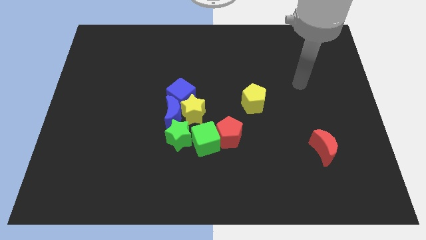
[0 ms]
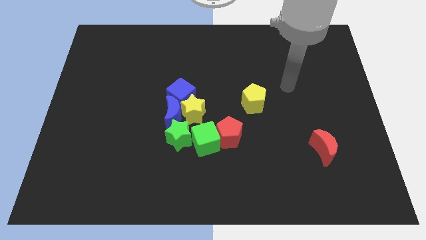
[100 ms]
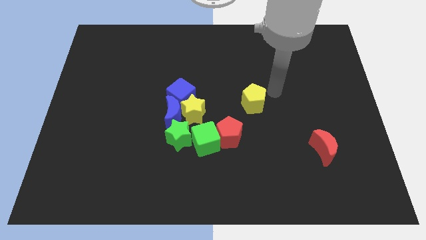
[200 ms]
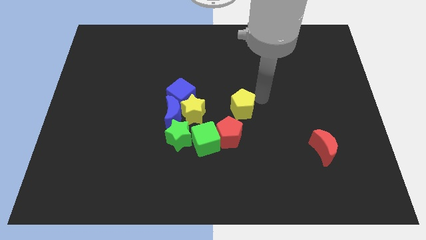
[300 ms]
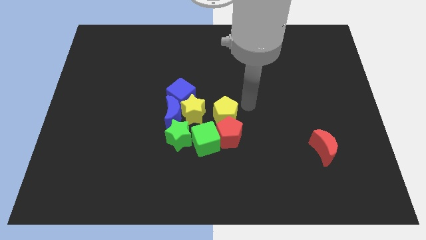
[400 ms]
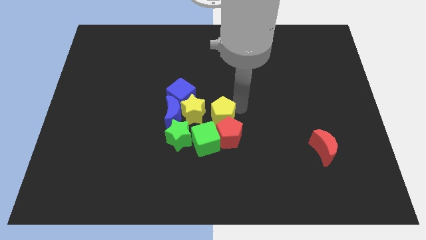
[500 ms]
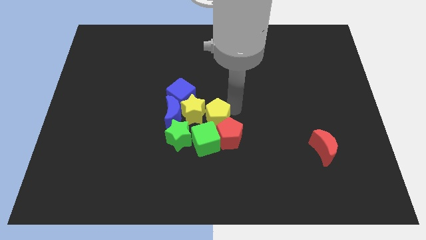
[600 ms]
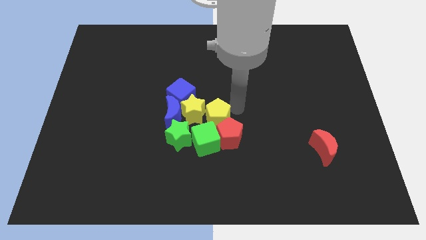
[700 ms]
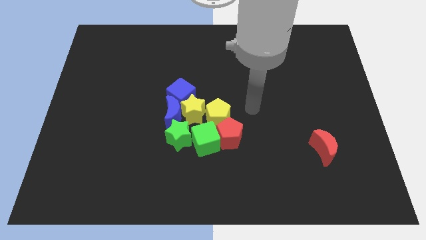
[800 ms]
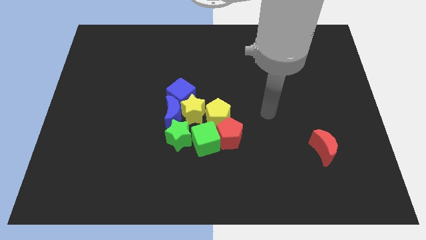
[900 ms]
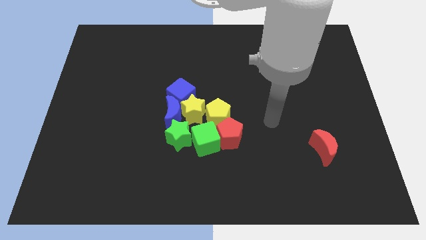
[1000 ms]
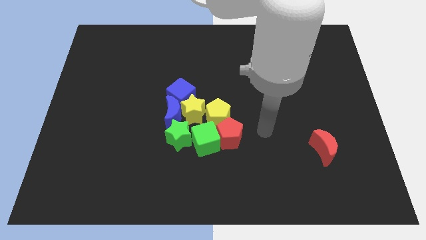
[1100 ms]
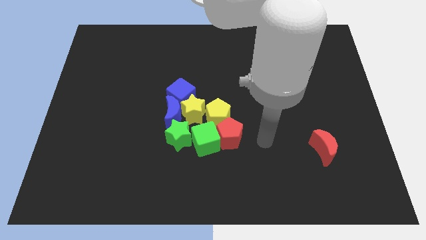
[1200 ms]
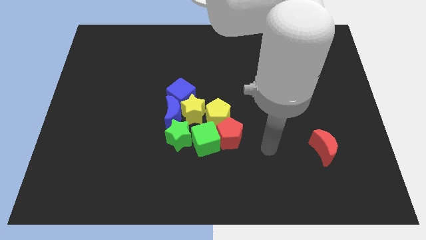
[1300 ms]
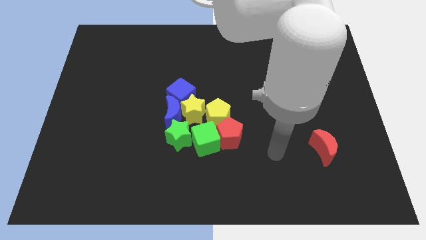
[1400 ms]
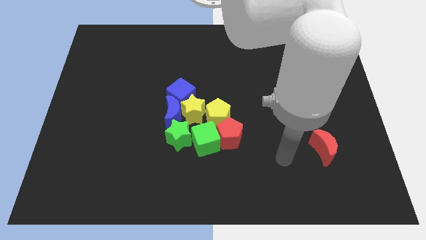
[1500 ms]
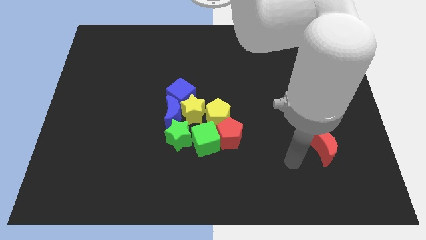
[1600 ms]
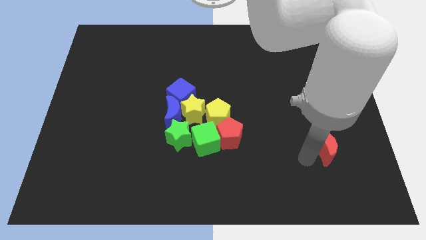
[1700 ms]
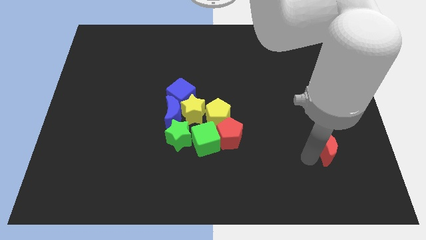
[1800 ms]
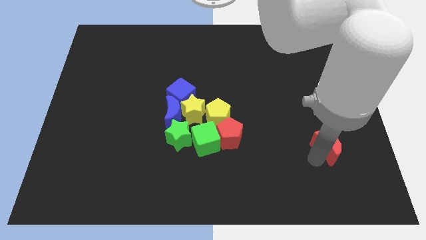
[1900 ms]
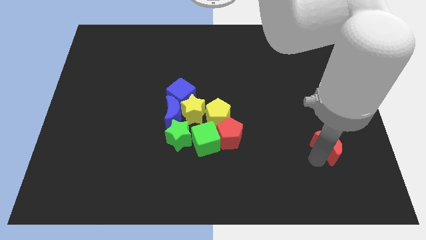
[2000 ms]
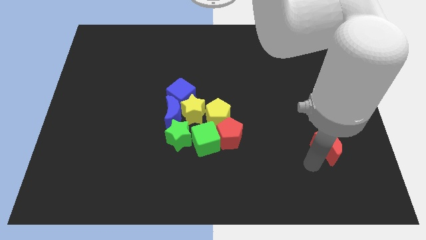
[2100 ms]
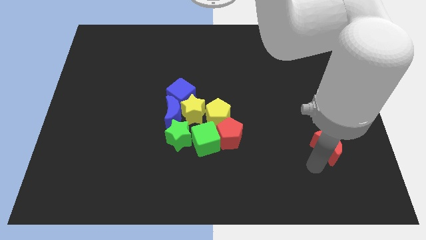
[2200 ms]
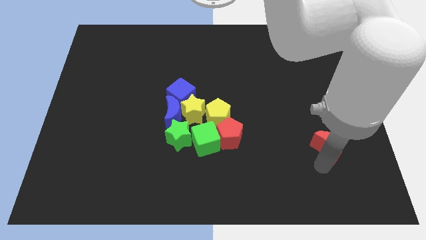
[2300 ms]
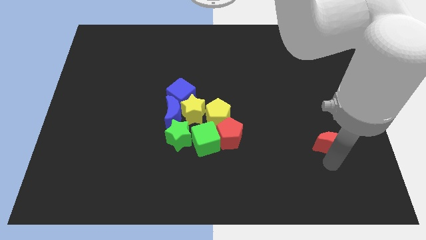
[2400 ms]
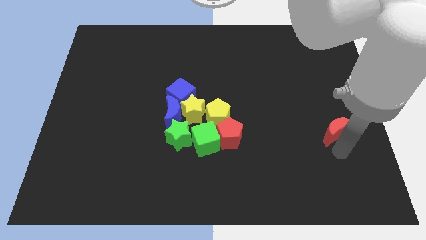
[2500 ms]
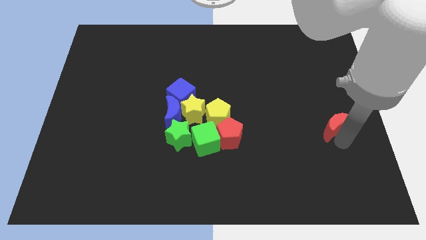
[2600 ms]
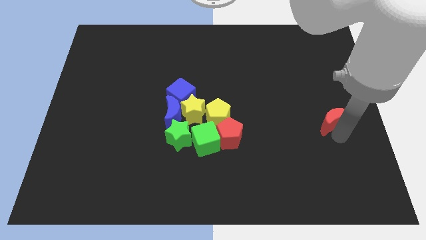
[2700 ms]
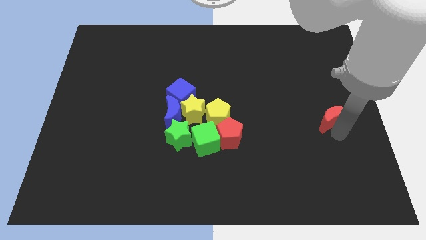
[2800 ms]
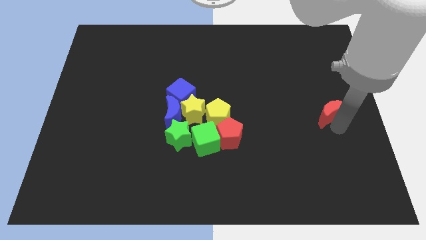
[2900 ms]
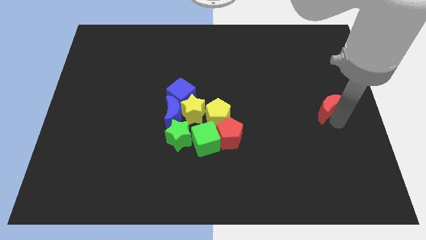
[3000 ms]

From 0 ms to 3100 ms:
push red crescent towards upside

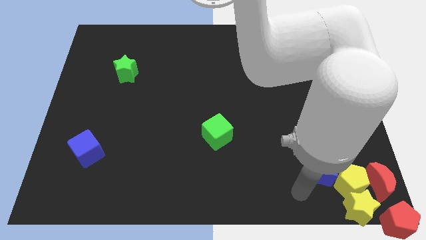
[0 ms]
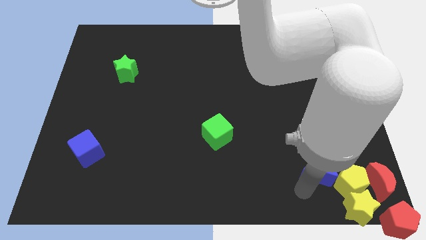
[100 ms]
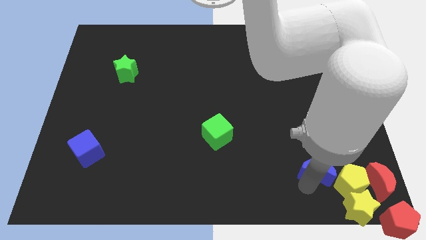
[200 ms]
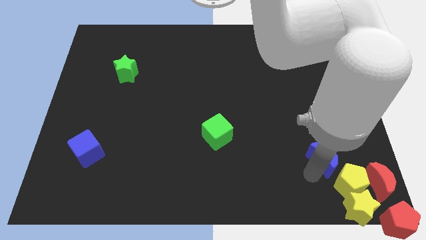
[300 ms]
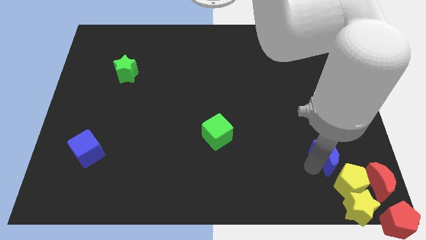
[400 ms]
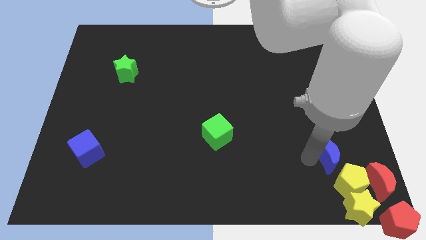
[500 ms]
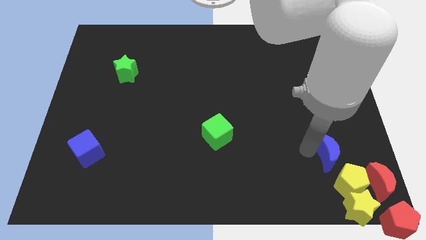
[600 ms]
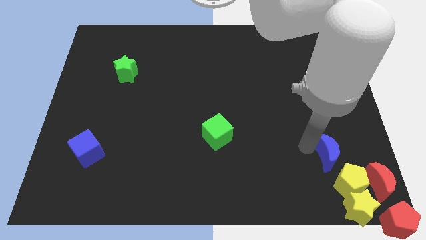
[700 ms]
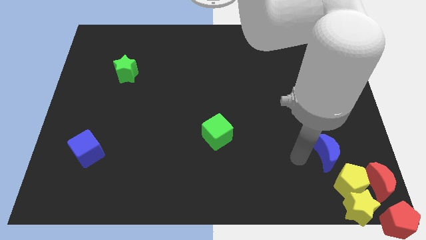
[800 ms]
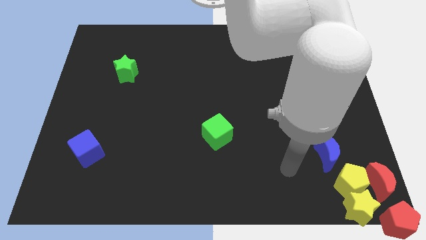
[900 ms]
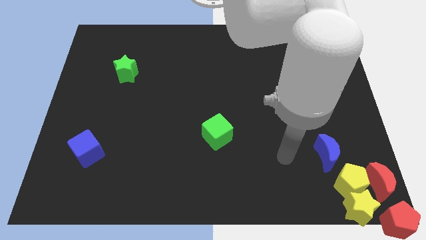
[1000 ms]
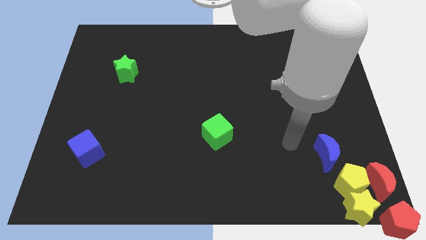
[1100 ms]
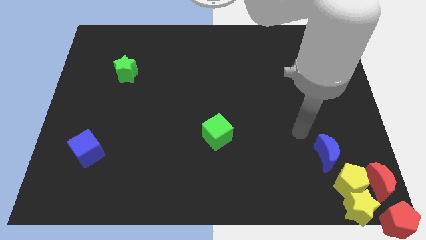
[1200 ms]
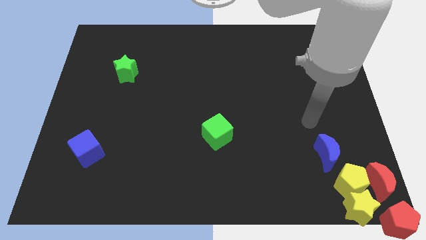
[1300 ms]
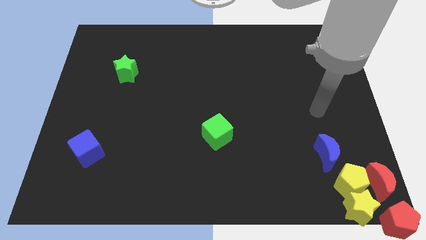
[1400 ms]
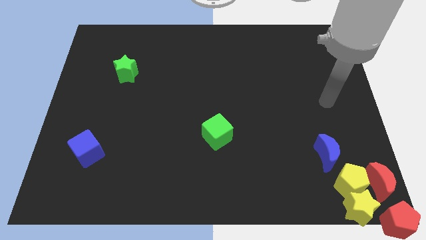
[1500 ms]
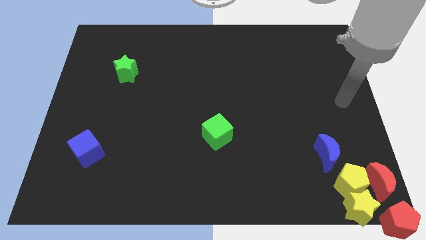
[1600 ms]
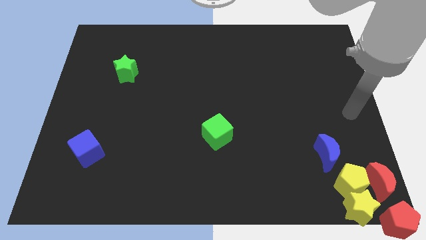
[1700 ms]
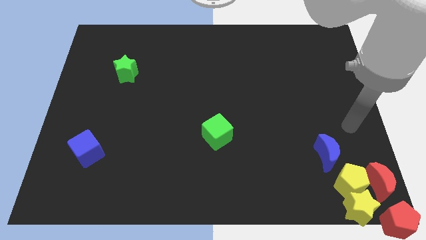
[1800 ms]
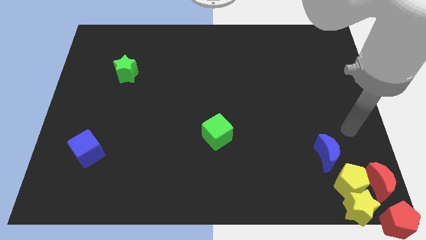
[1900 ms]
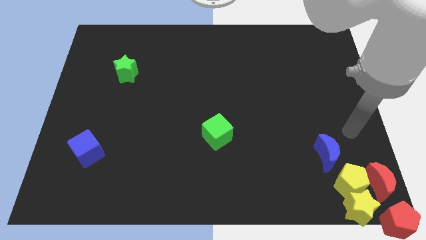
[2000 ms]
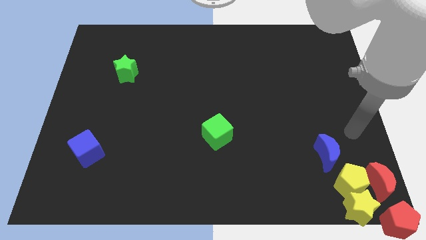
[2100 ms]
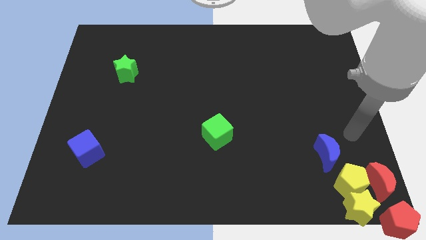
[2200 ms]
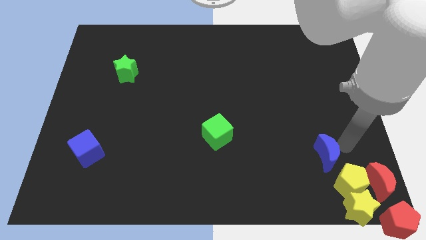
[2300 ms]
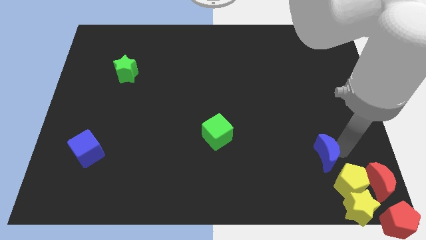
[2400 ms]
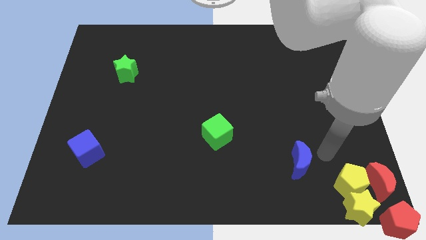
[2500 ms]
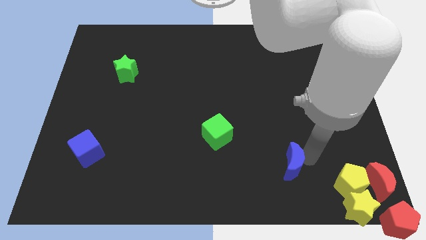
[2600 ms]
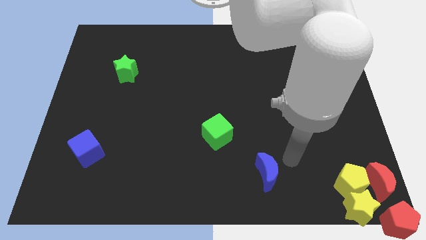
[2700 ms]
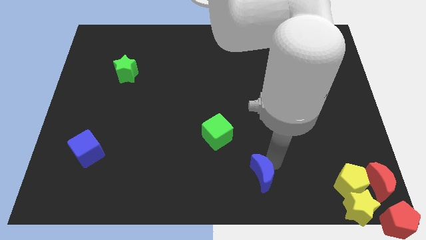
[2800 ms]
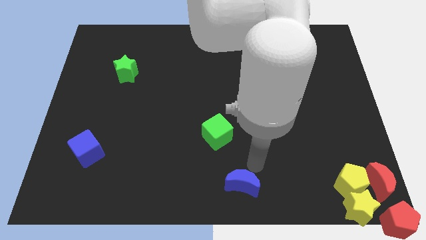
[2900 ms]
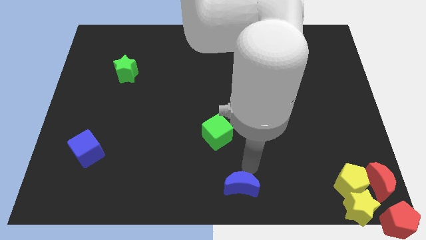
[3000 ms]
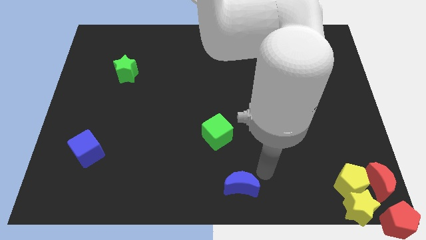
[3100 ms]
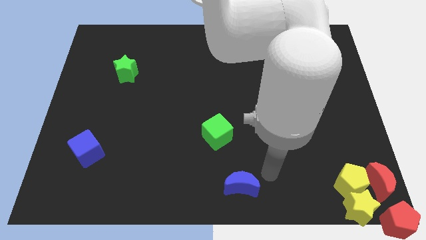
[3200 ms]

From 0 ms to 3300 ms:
move the blue moon to the bottom middle of the board

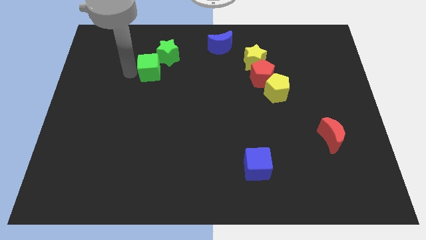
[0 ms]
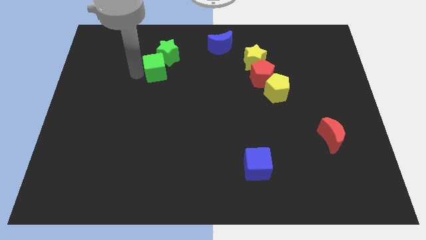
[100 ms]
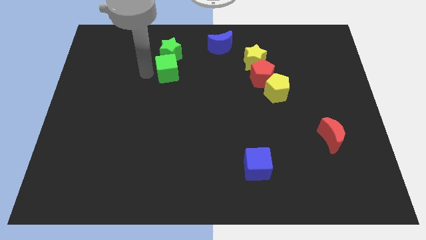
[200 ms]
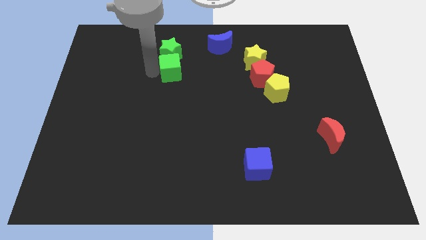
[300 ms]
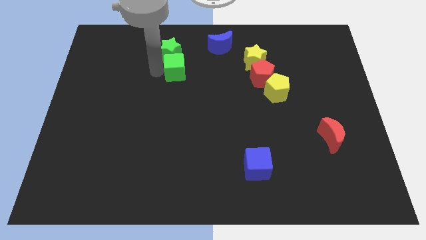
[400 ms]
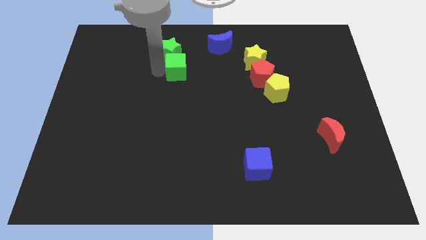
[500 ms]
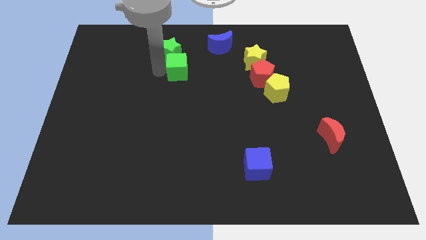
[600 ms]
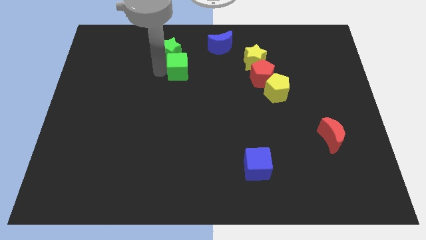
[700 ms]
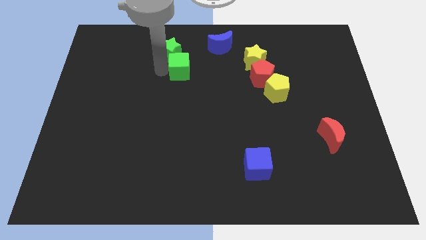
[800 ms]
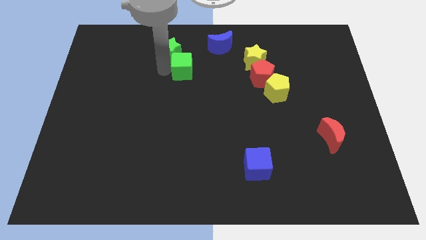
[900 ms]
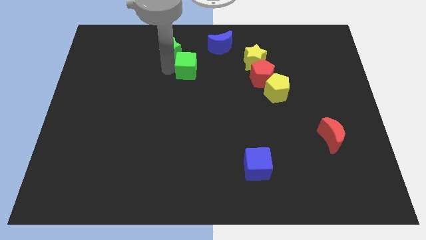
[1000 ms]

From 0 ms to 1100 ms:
push the green cube to the bottom right of the green star

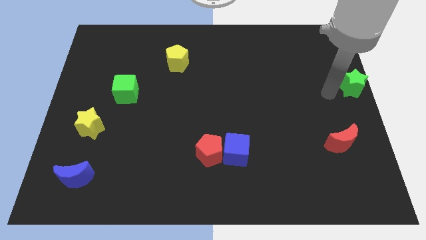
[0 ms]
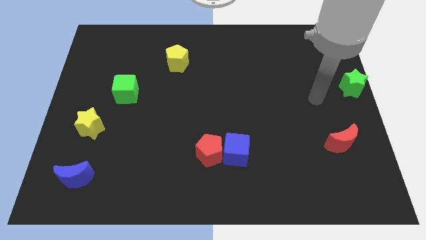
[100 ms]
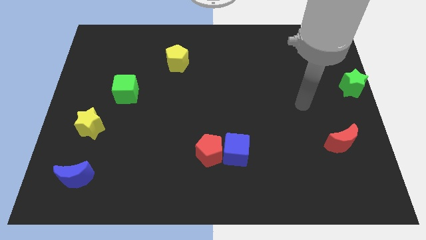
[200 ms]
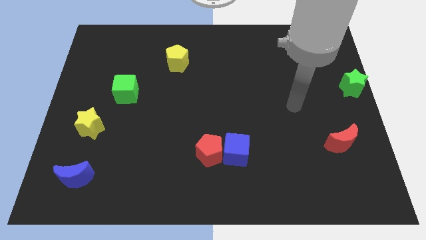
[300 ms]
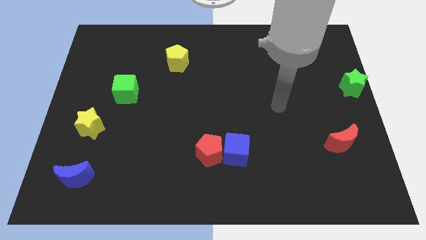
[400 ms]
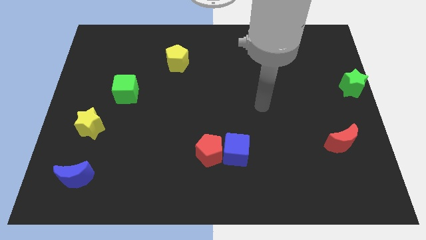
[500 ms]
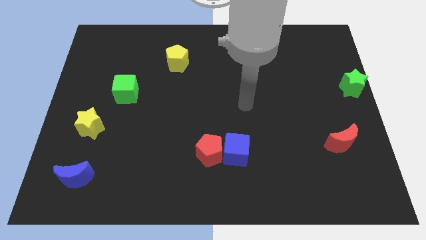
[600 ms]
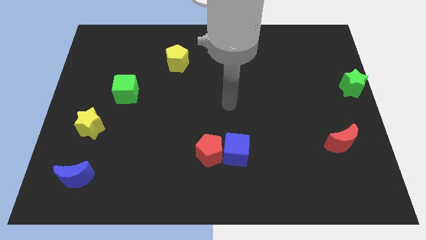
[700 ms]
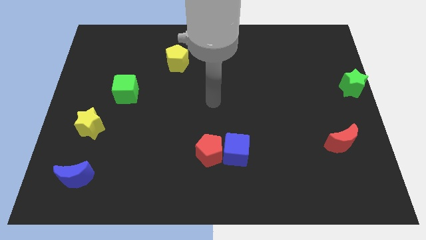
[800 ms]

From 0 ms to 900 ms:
place your arm on the center of the board

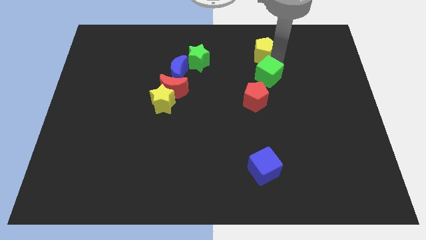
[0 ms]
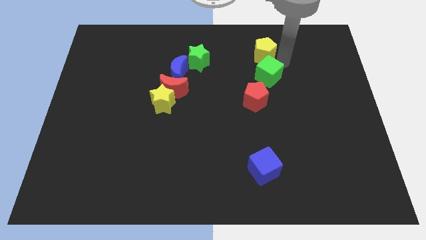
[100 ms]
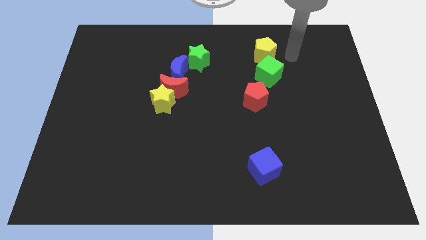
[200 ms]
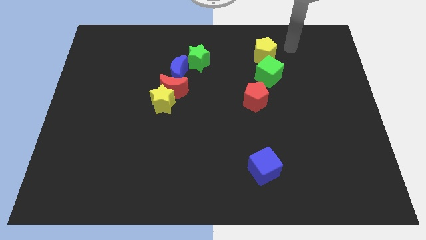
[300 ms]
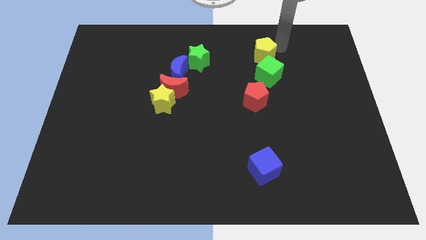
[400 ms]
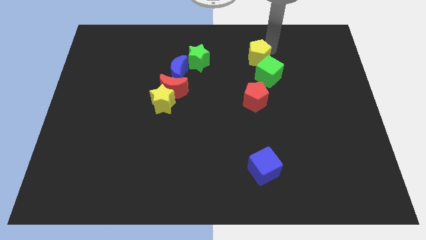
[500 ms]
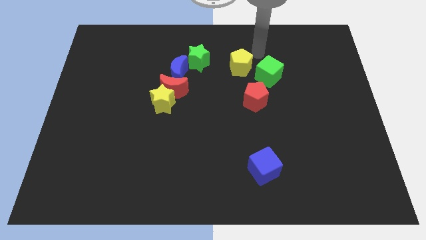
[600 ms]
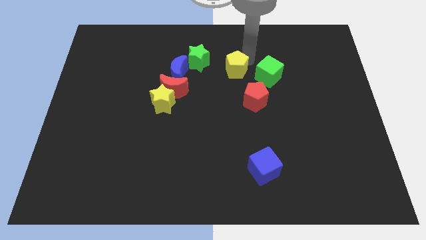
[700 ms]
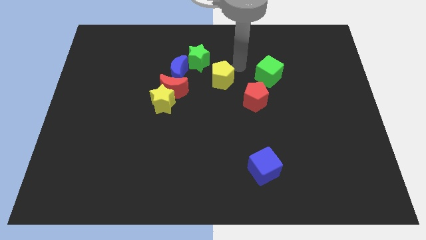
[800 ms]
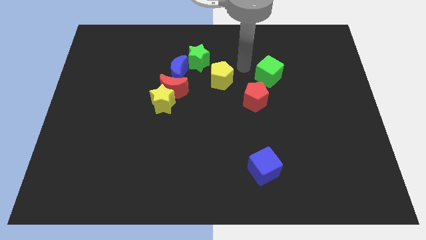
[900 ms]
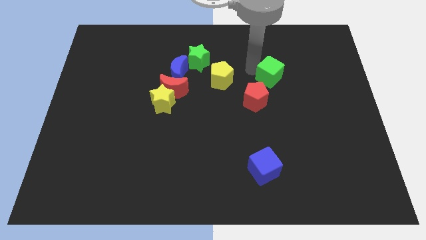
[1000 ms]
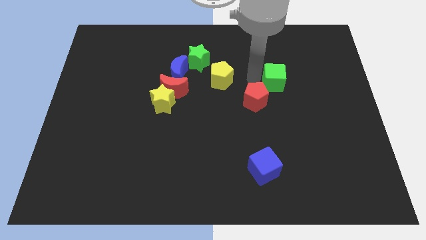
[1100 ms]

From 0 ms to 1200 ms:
move the yellow pentagon to the center of the board
